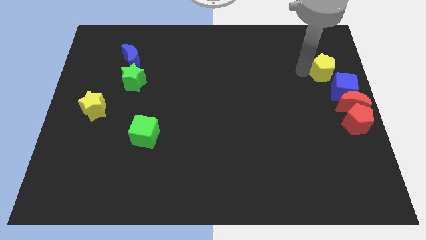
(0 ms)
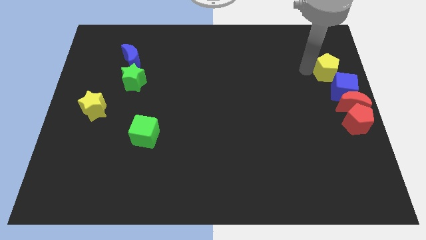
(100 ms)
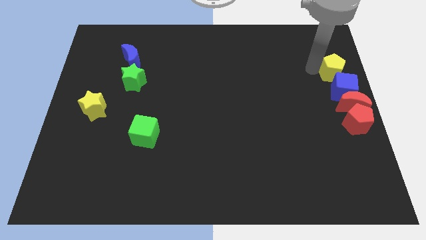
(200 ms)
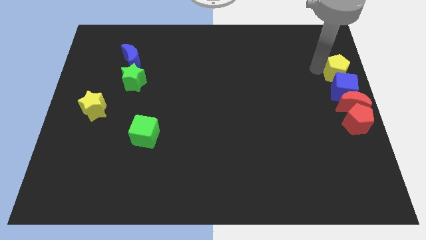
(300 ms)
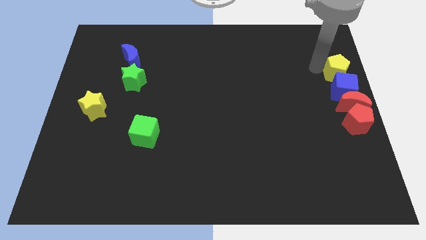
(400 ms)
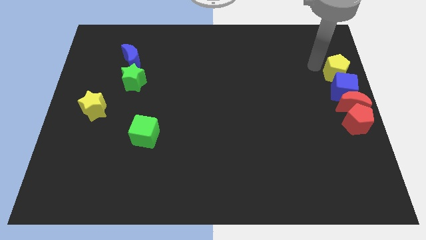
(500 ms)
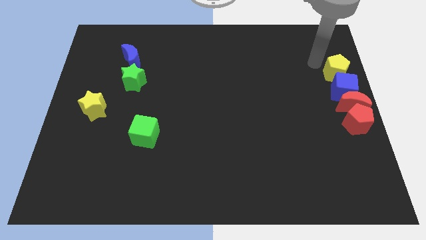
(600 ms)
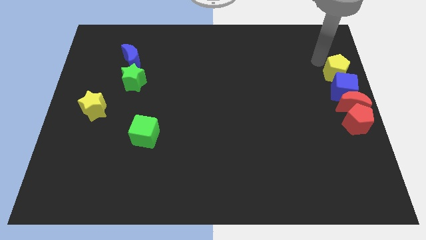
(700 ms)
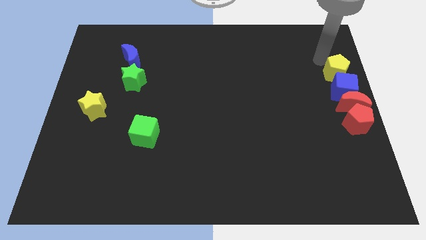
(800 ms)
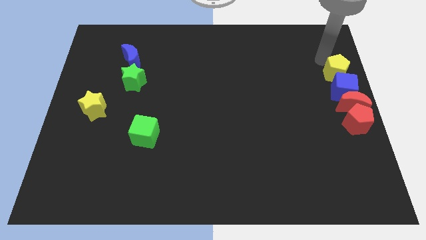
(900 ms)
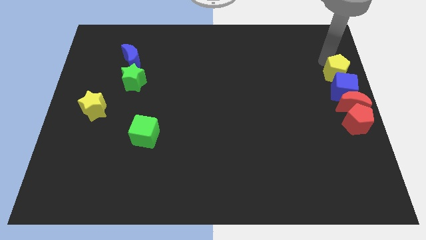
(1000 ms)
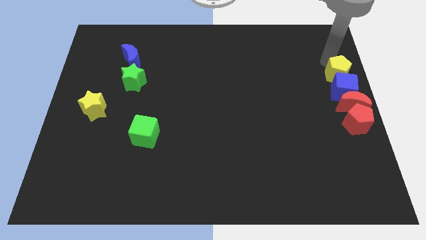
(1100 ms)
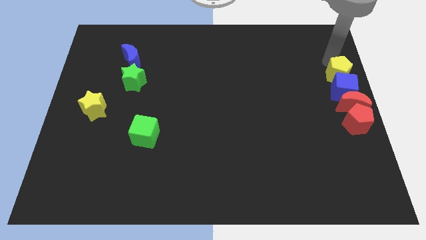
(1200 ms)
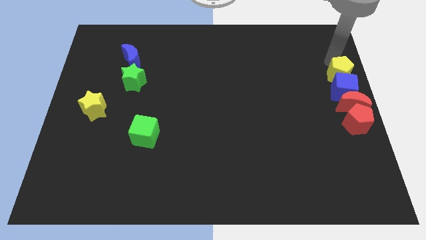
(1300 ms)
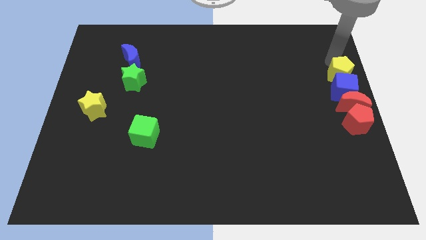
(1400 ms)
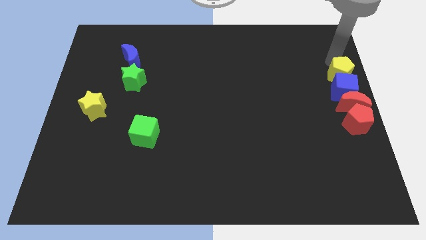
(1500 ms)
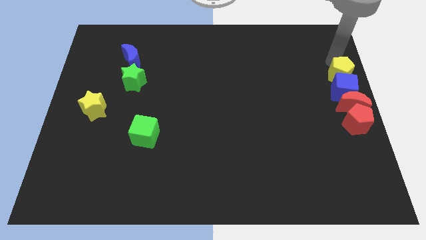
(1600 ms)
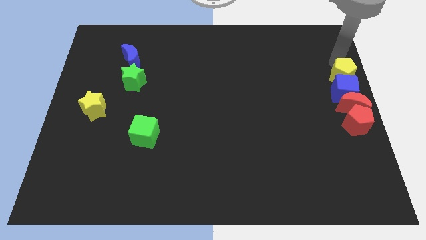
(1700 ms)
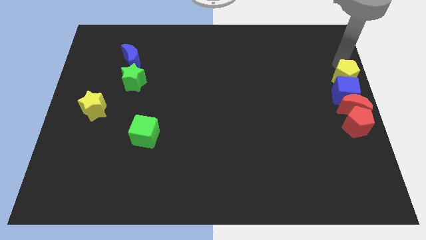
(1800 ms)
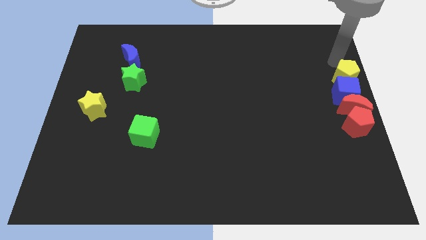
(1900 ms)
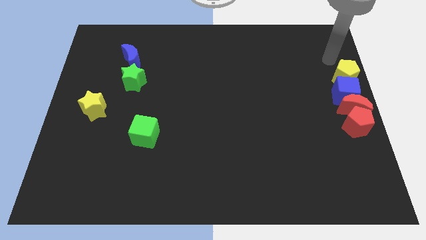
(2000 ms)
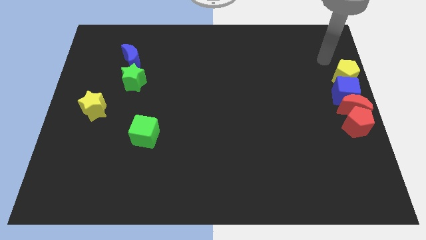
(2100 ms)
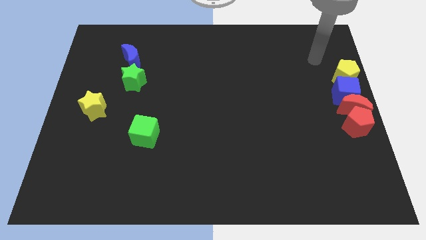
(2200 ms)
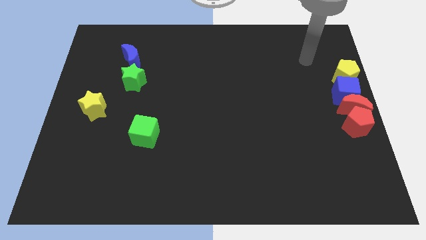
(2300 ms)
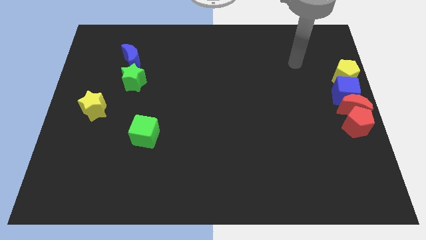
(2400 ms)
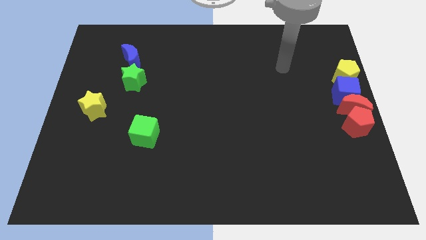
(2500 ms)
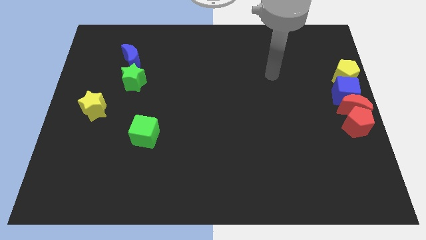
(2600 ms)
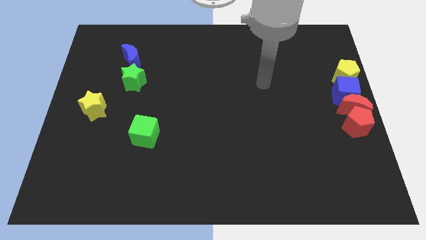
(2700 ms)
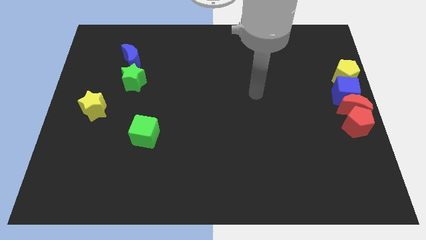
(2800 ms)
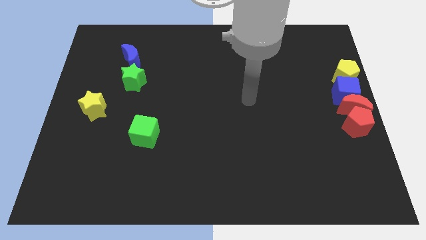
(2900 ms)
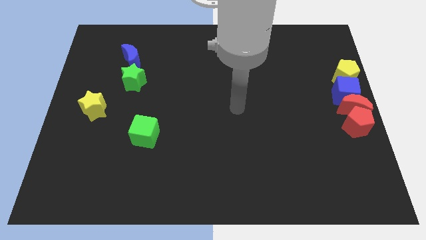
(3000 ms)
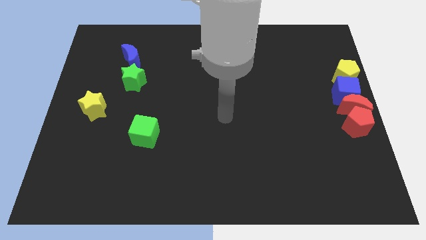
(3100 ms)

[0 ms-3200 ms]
place the yellow pentagon on top of the blue cube

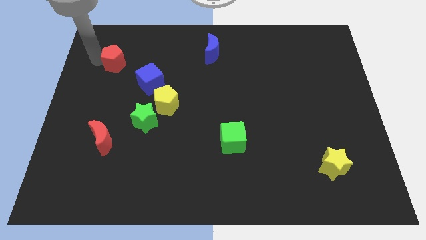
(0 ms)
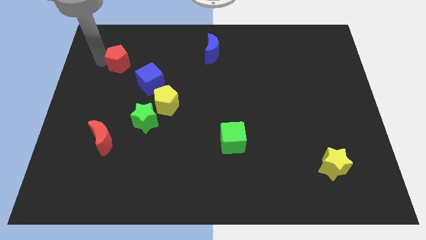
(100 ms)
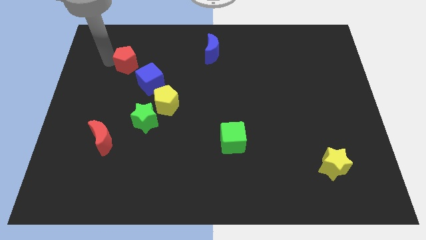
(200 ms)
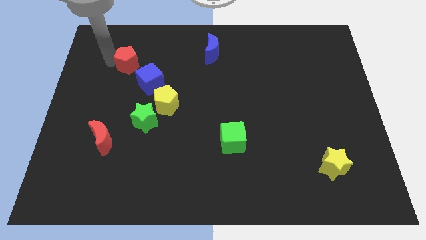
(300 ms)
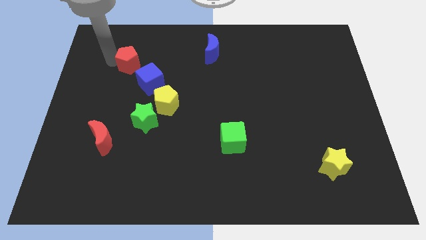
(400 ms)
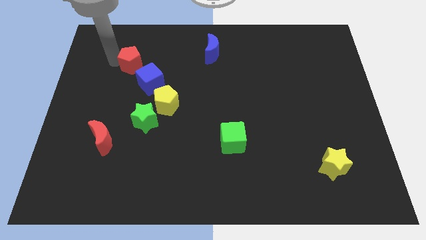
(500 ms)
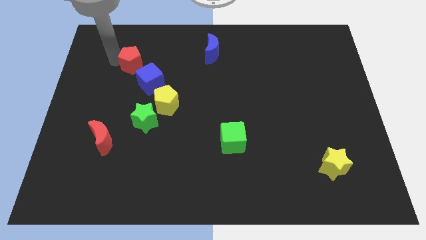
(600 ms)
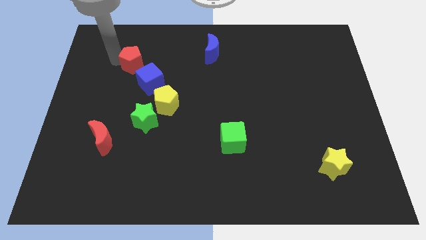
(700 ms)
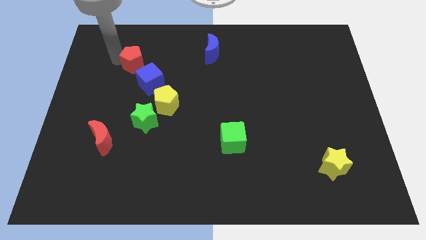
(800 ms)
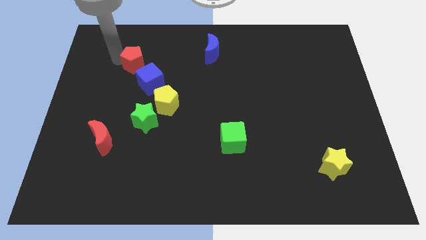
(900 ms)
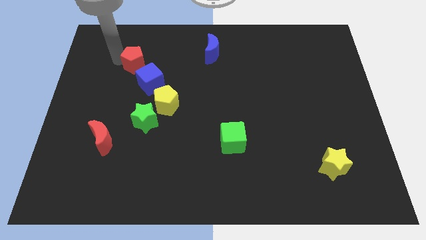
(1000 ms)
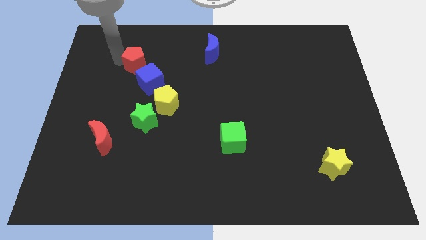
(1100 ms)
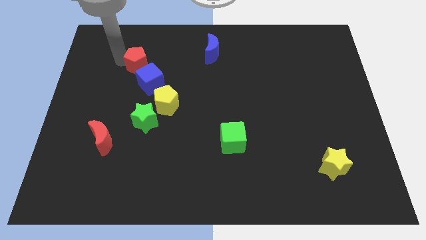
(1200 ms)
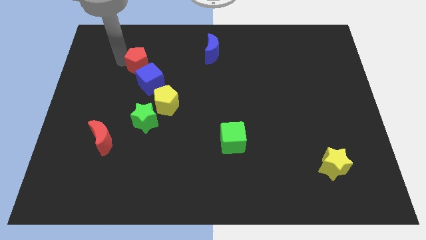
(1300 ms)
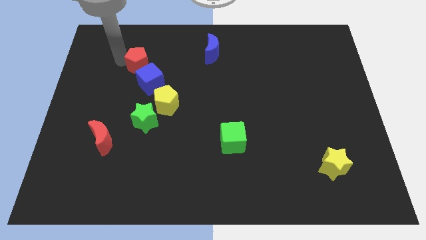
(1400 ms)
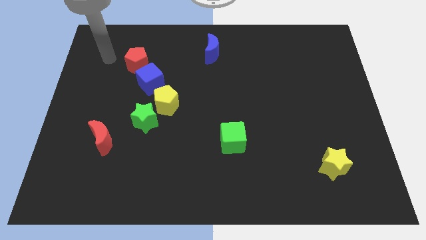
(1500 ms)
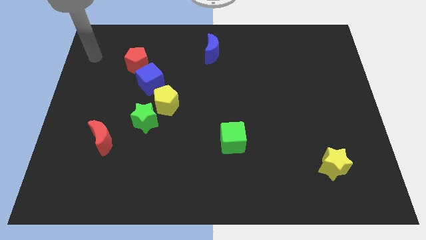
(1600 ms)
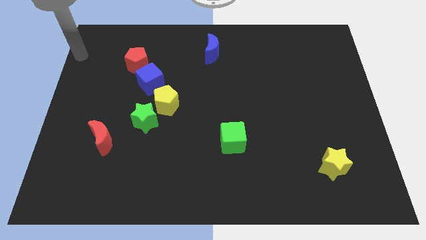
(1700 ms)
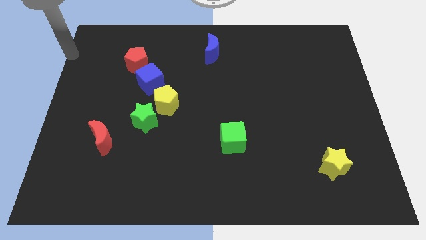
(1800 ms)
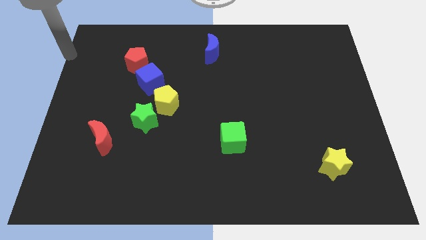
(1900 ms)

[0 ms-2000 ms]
place the red pentagon close to the blue cube

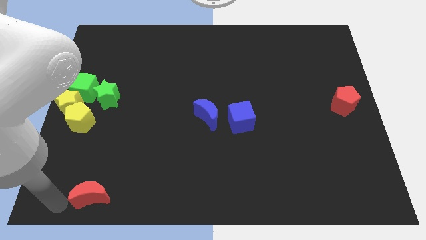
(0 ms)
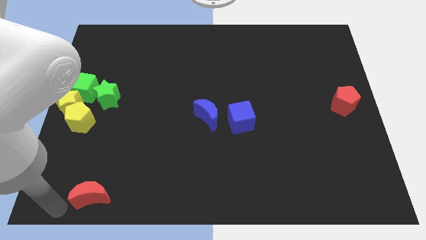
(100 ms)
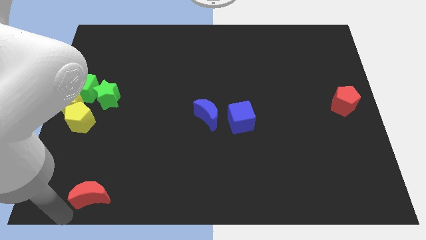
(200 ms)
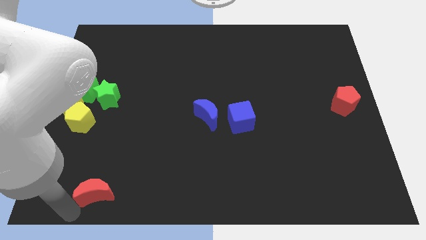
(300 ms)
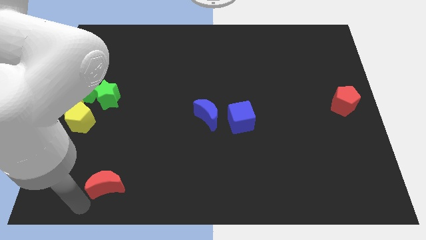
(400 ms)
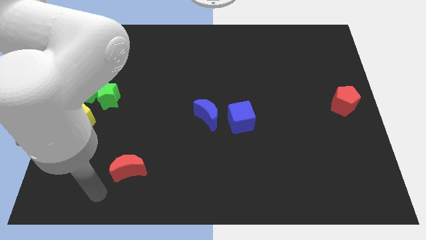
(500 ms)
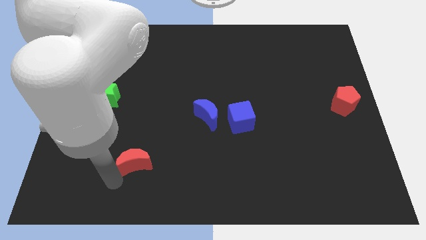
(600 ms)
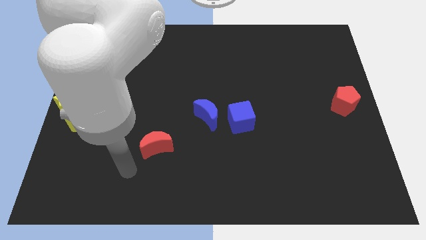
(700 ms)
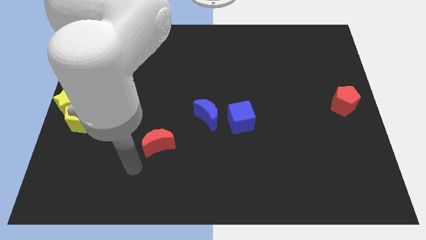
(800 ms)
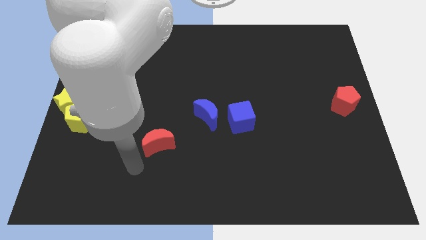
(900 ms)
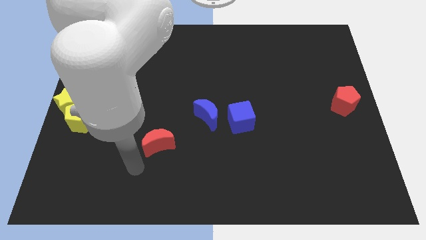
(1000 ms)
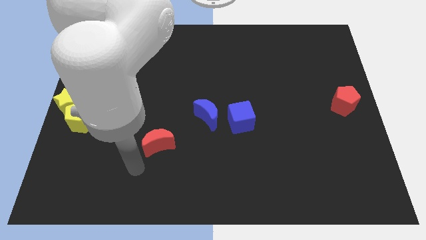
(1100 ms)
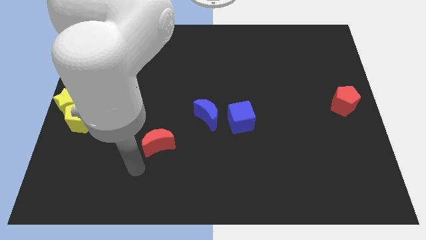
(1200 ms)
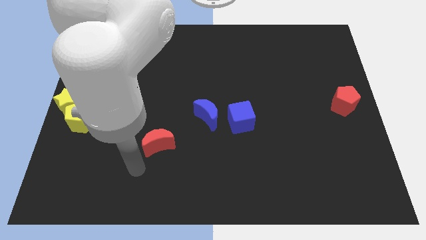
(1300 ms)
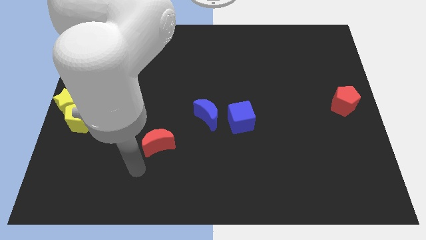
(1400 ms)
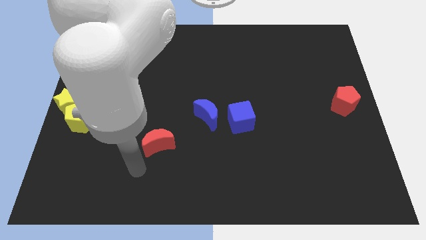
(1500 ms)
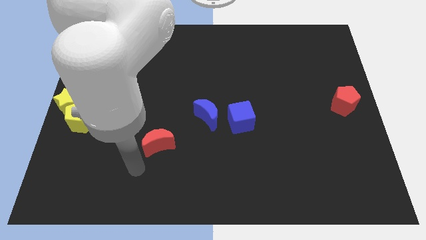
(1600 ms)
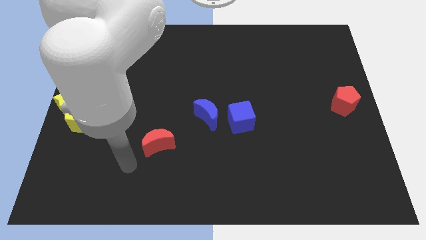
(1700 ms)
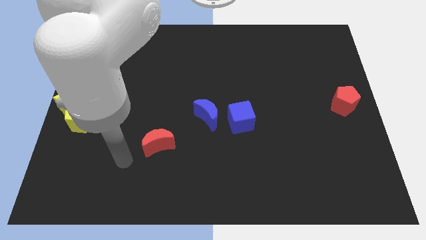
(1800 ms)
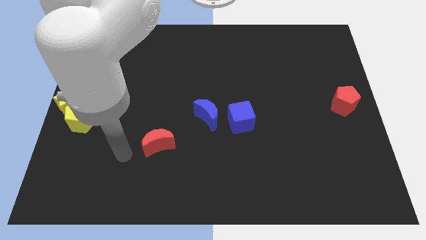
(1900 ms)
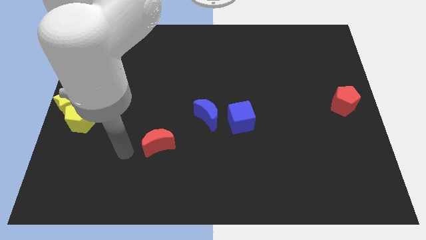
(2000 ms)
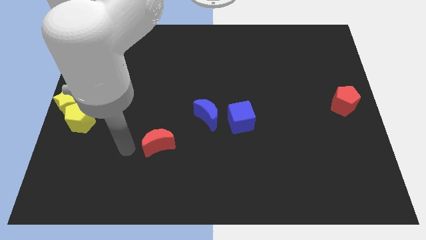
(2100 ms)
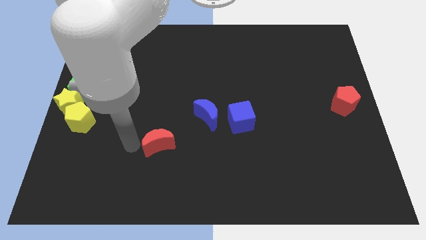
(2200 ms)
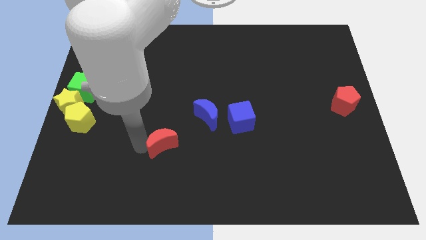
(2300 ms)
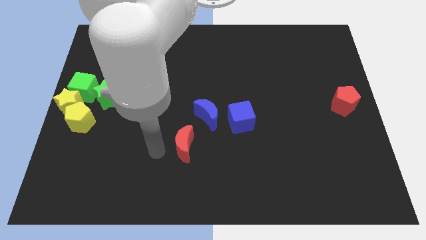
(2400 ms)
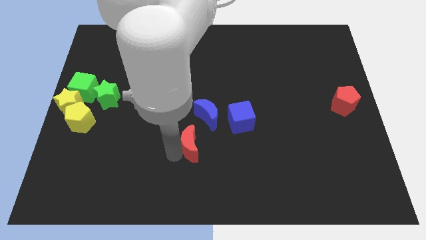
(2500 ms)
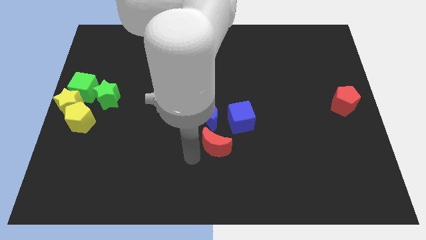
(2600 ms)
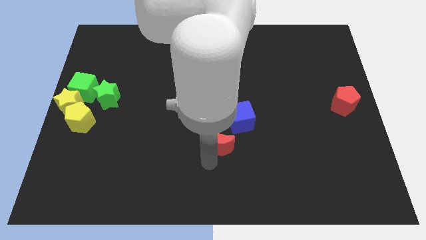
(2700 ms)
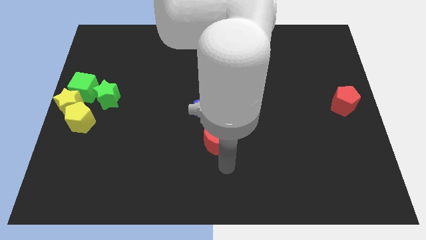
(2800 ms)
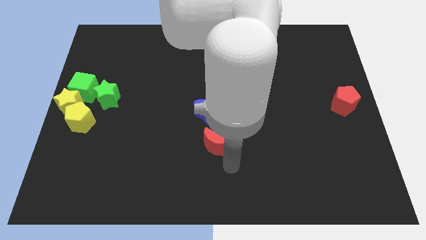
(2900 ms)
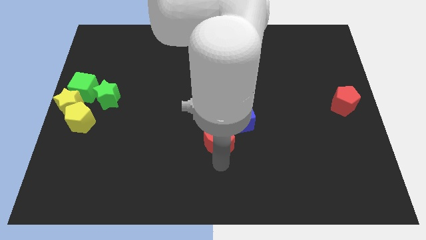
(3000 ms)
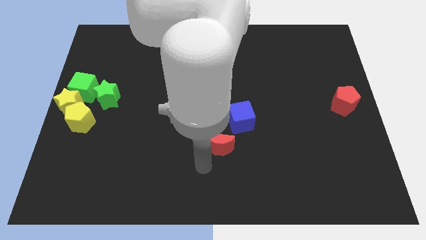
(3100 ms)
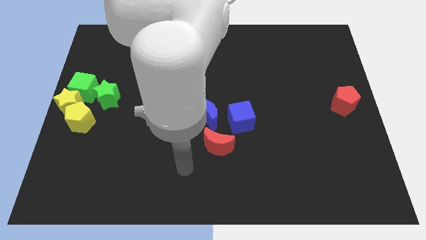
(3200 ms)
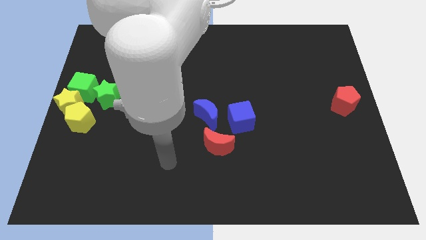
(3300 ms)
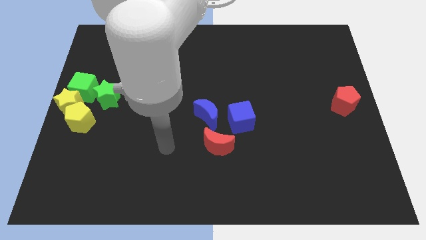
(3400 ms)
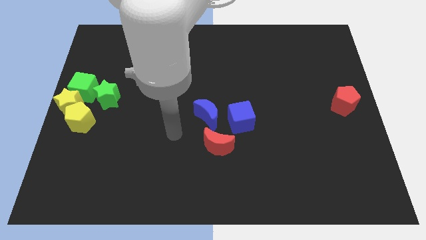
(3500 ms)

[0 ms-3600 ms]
place the red moon under the blue blocks

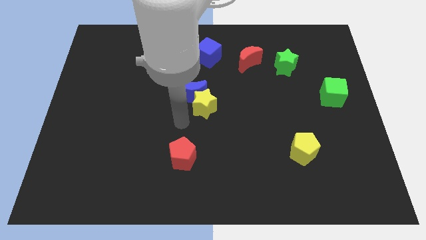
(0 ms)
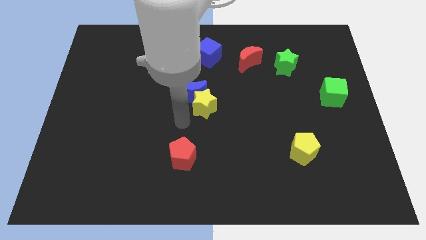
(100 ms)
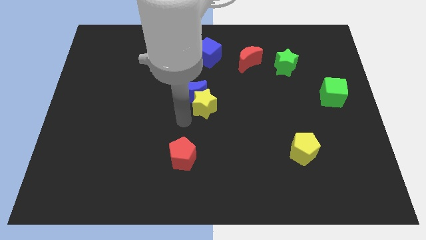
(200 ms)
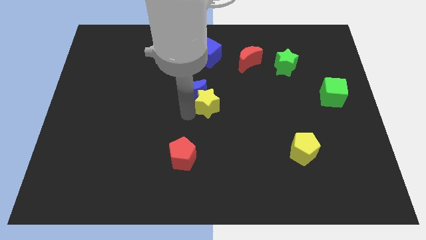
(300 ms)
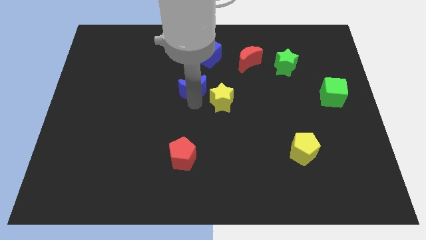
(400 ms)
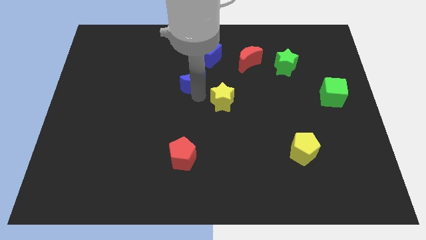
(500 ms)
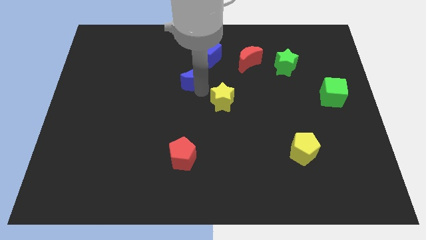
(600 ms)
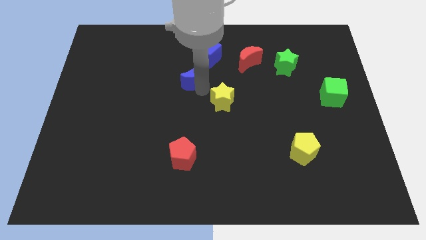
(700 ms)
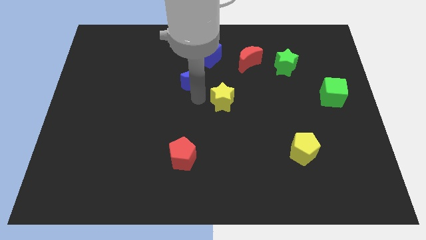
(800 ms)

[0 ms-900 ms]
separate the blue crescent and the yellow star
